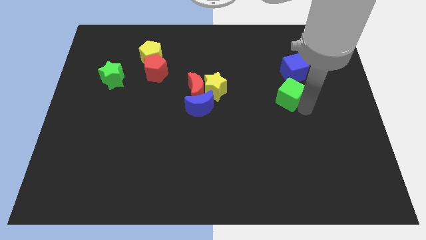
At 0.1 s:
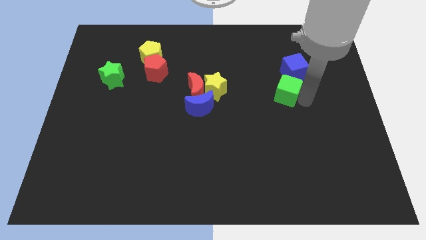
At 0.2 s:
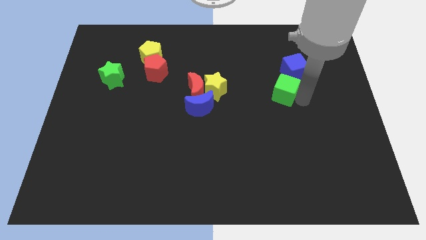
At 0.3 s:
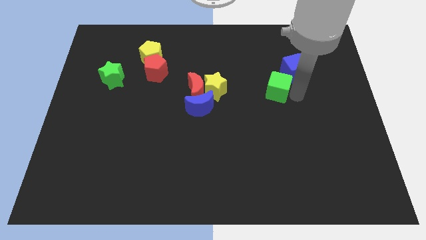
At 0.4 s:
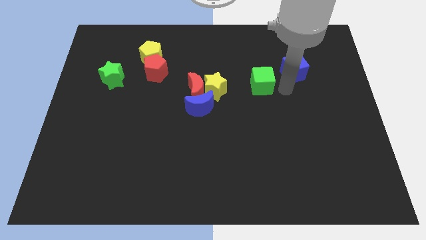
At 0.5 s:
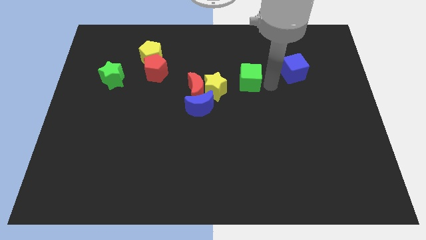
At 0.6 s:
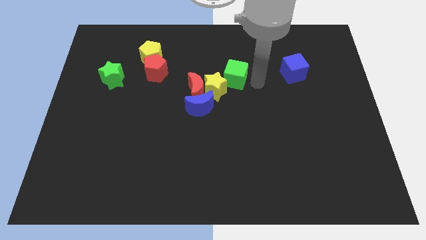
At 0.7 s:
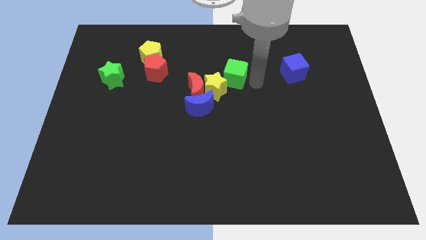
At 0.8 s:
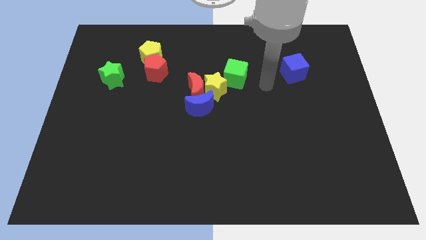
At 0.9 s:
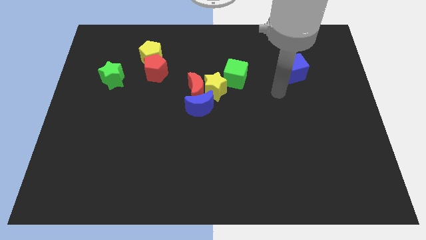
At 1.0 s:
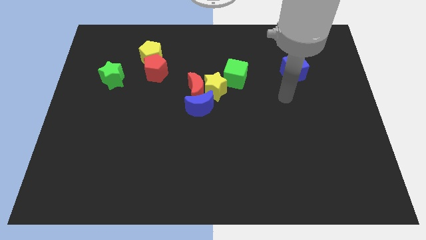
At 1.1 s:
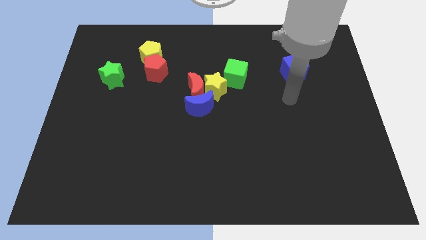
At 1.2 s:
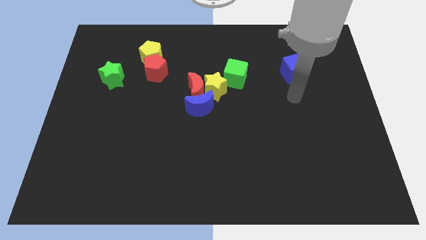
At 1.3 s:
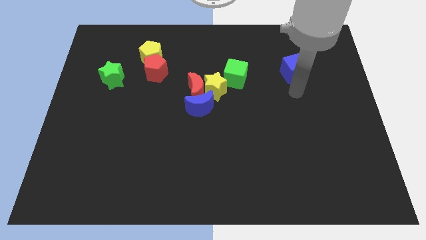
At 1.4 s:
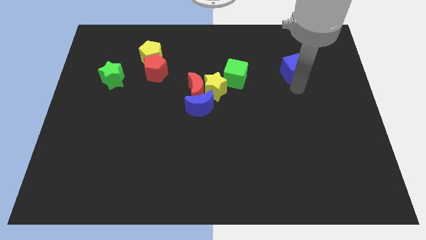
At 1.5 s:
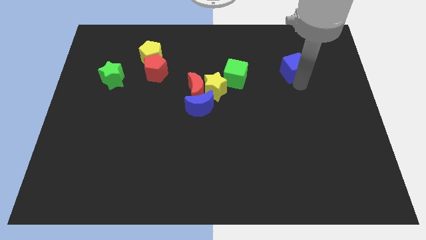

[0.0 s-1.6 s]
attach the green cube to the yellow star
